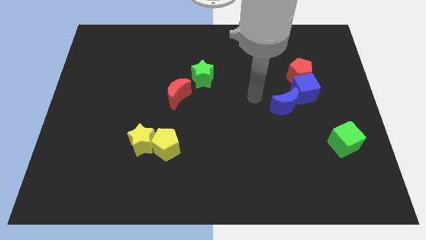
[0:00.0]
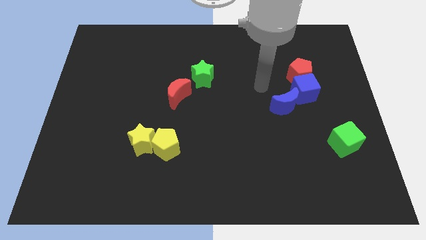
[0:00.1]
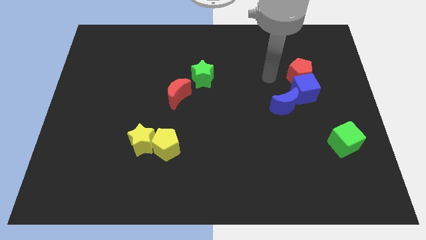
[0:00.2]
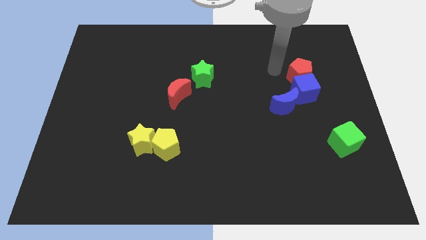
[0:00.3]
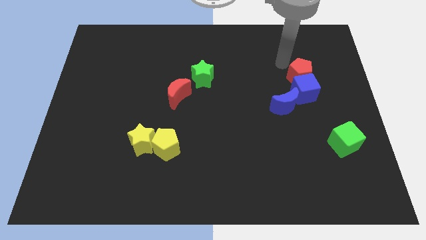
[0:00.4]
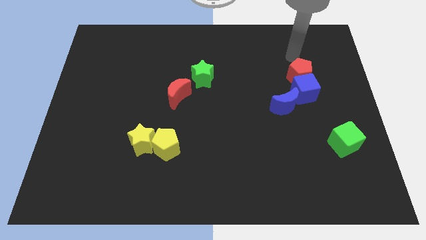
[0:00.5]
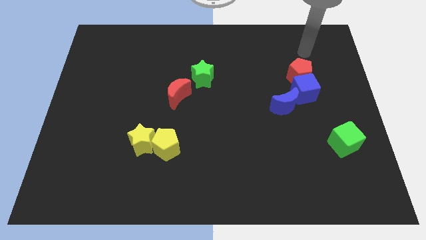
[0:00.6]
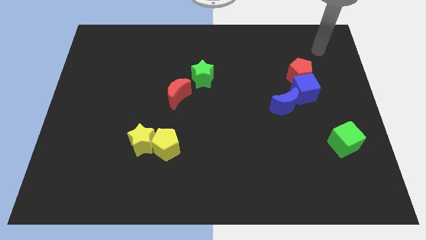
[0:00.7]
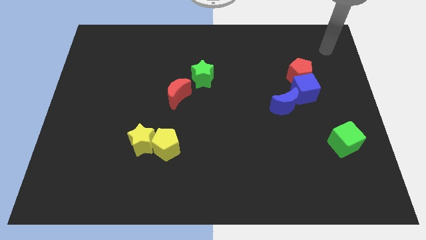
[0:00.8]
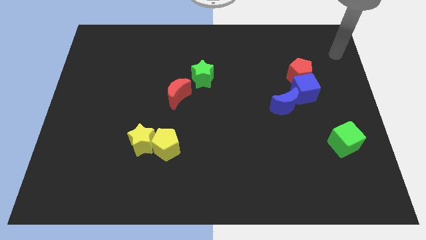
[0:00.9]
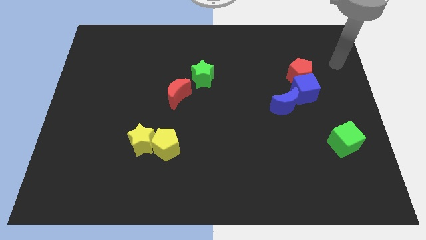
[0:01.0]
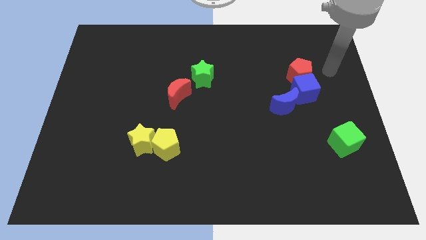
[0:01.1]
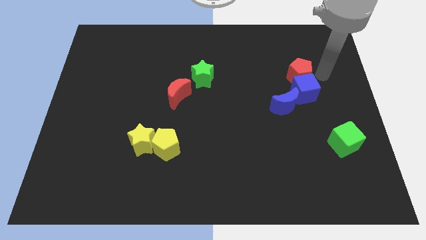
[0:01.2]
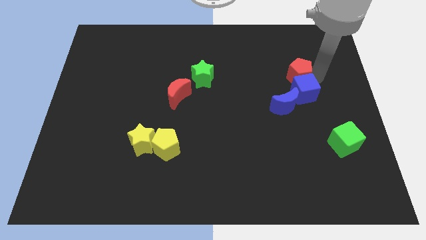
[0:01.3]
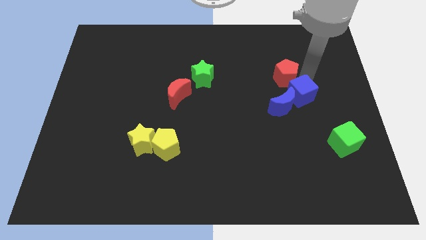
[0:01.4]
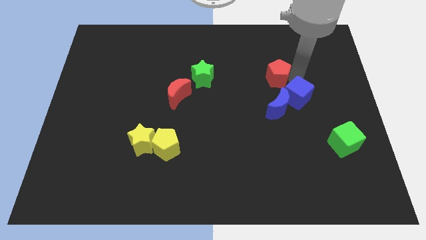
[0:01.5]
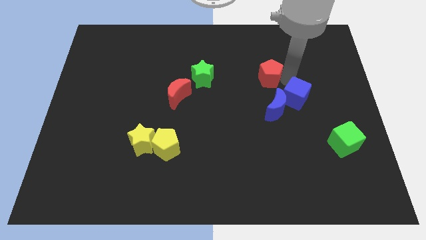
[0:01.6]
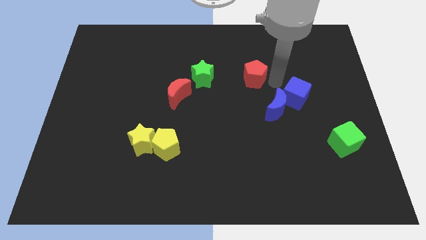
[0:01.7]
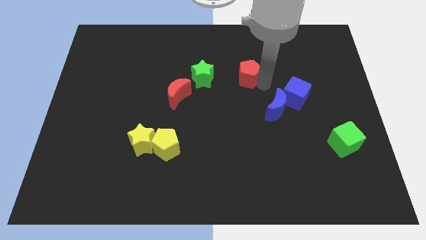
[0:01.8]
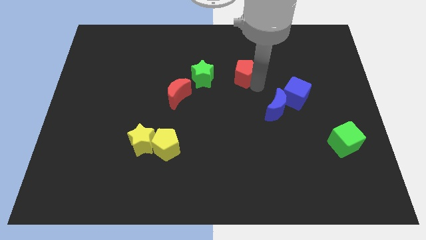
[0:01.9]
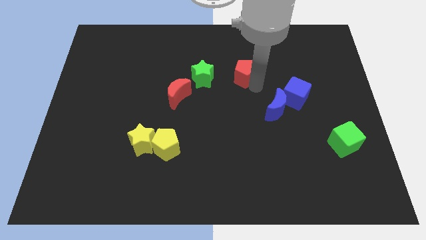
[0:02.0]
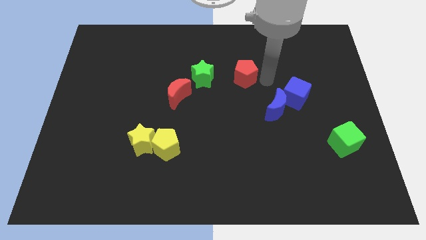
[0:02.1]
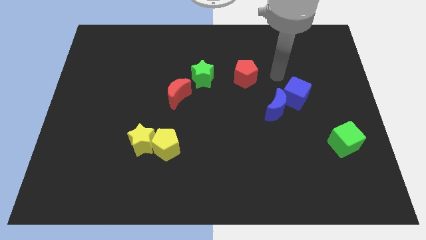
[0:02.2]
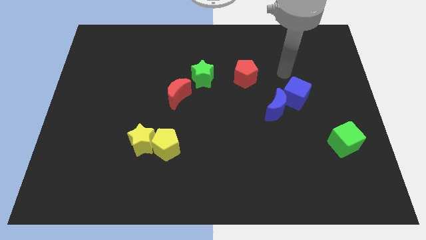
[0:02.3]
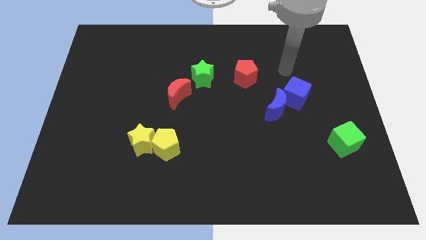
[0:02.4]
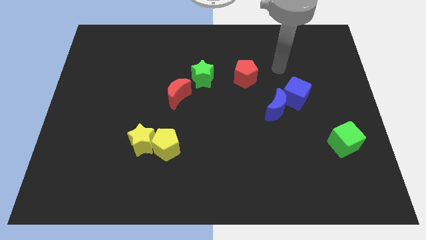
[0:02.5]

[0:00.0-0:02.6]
separate red pentagon from blue cube

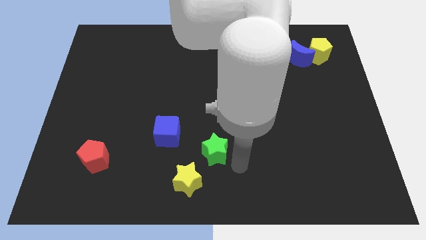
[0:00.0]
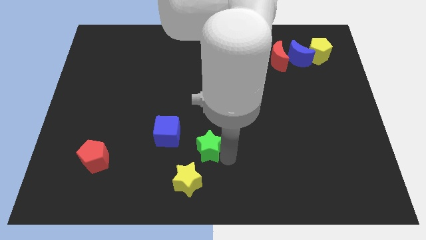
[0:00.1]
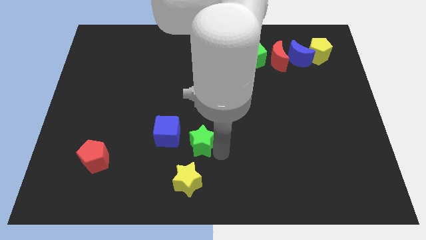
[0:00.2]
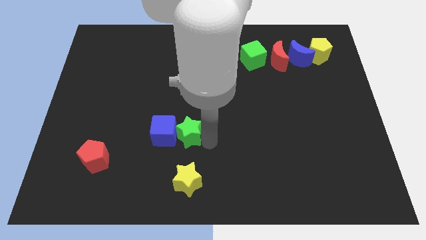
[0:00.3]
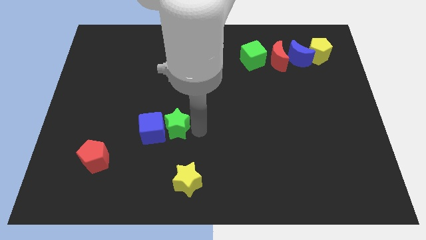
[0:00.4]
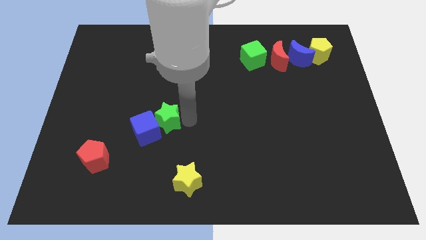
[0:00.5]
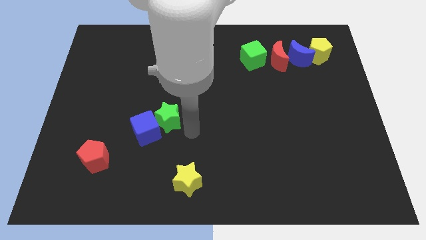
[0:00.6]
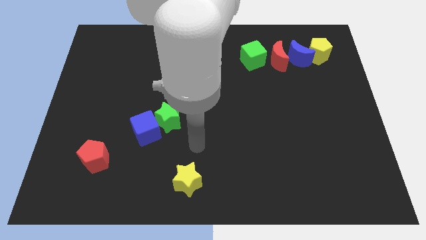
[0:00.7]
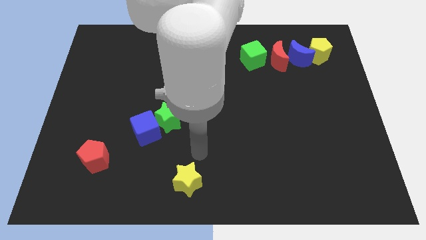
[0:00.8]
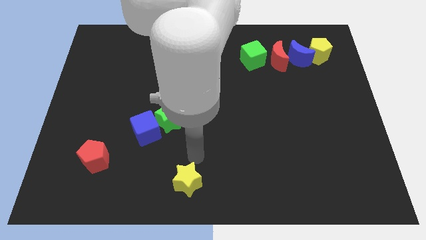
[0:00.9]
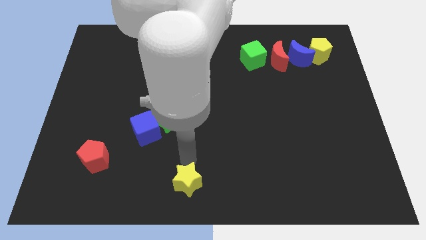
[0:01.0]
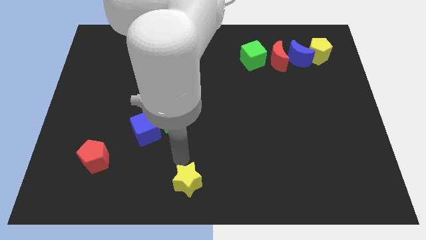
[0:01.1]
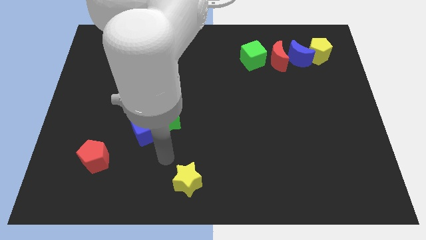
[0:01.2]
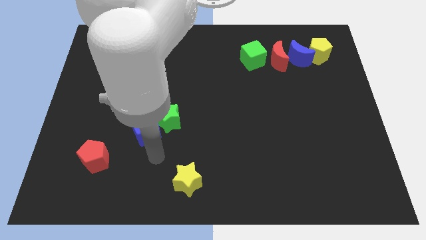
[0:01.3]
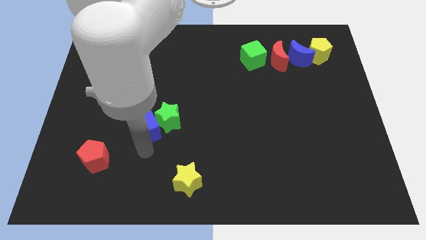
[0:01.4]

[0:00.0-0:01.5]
move the green star right to the blue cube

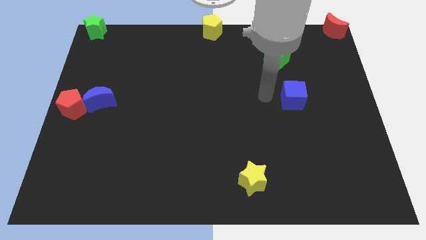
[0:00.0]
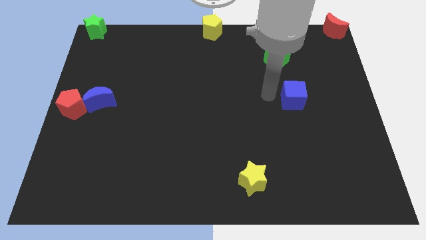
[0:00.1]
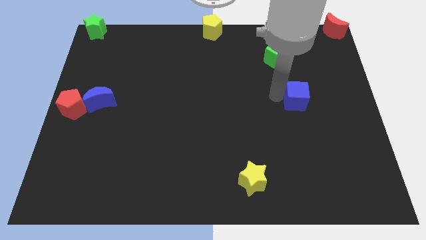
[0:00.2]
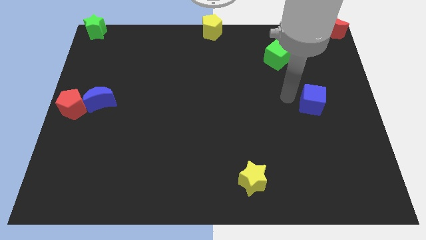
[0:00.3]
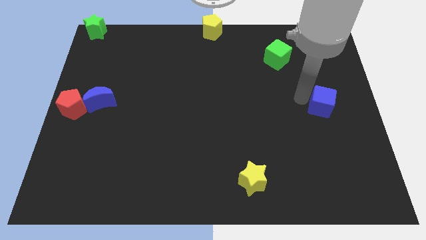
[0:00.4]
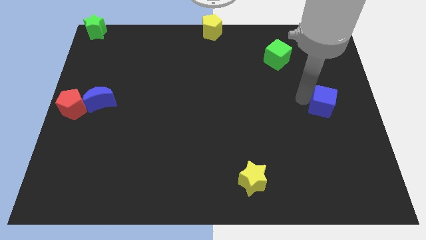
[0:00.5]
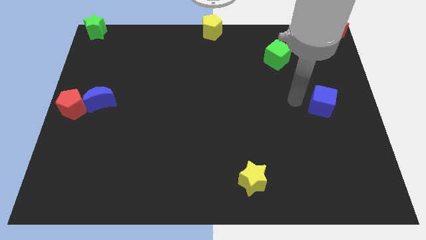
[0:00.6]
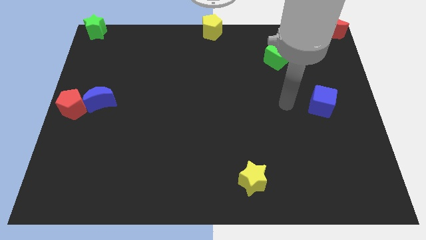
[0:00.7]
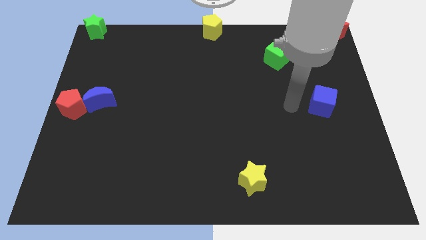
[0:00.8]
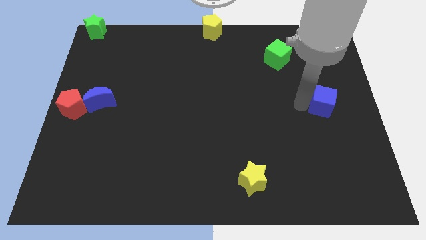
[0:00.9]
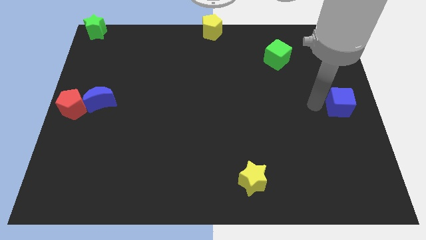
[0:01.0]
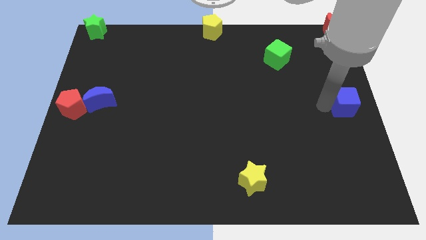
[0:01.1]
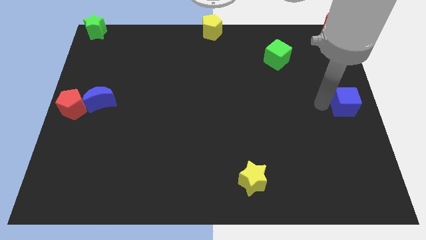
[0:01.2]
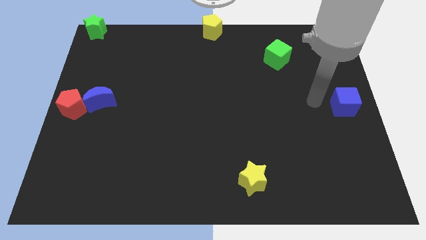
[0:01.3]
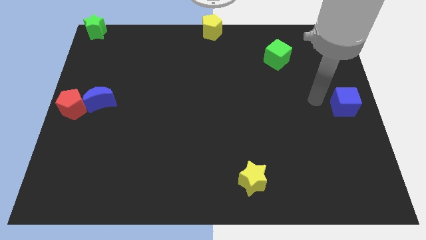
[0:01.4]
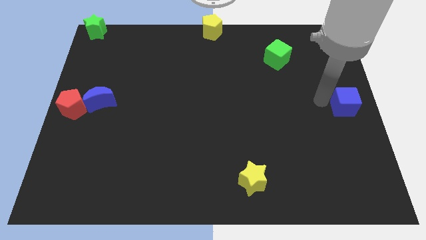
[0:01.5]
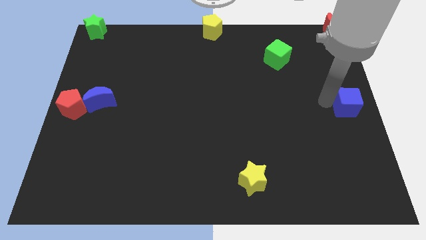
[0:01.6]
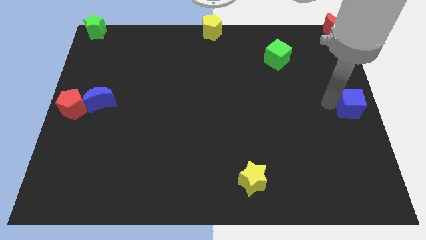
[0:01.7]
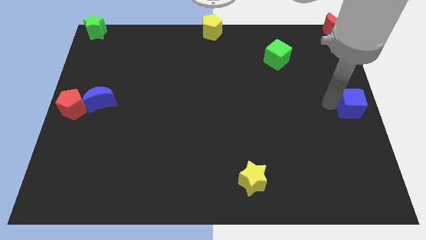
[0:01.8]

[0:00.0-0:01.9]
push the blue cube to the right centre of the board

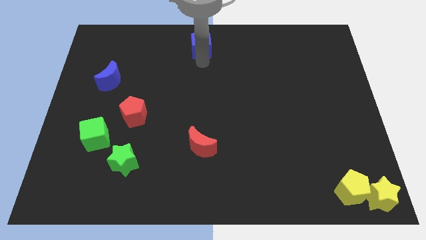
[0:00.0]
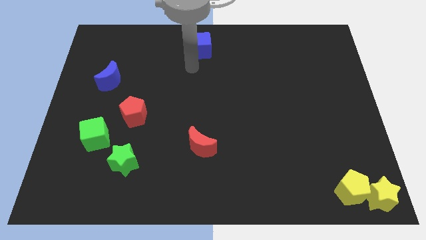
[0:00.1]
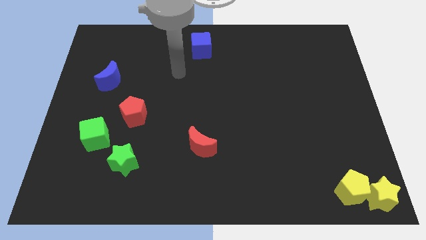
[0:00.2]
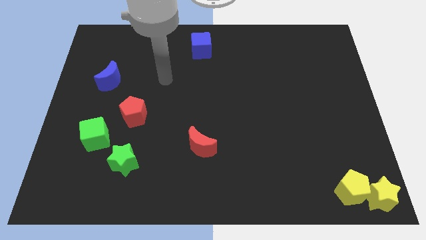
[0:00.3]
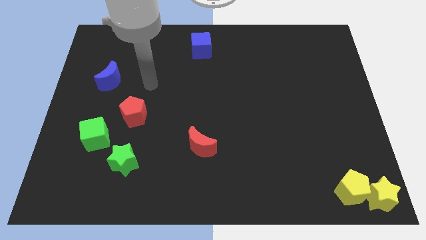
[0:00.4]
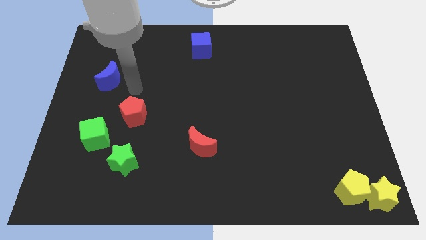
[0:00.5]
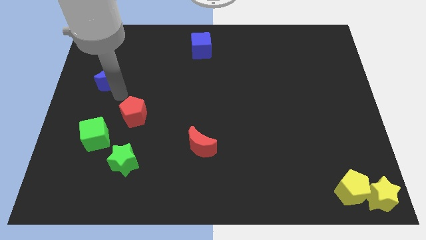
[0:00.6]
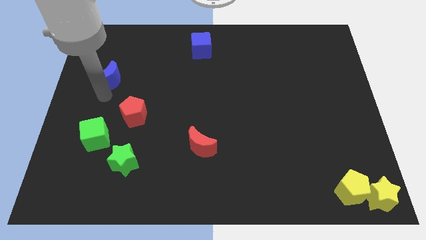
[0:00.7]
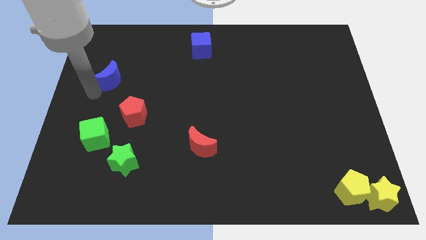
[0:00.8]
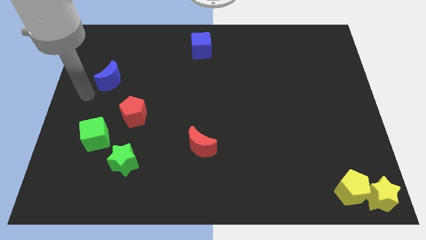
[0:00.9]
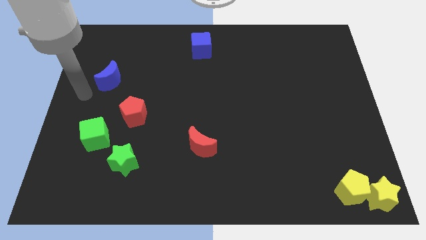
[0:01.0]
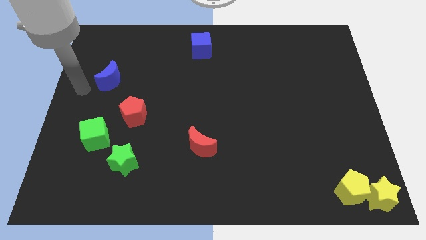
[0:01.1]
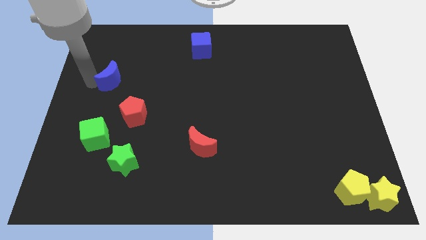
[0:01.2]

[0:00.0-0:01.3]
move your arm away from the blue cube

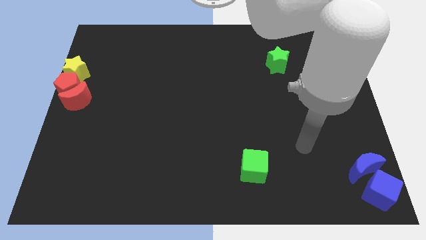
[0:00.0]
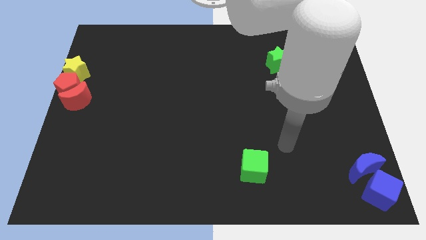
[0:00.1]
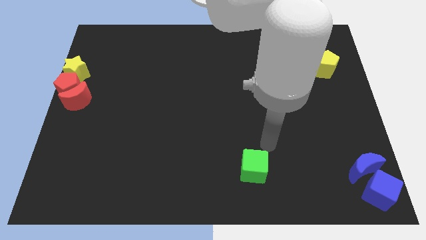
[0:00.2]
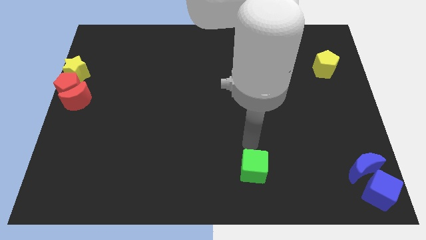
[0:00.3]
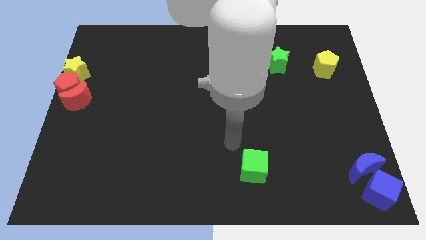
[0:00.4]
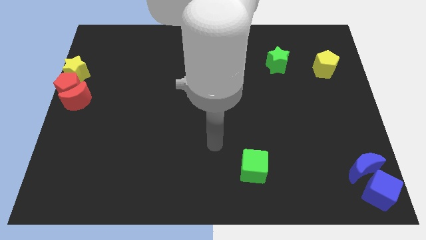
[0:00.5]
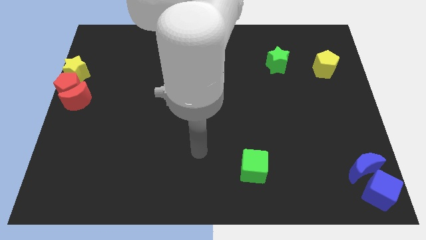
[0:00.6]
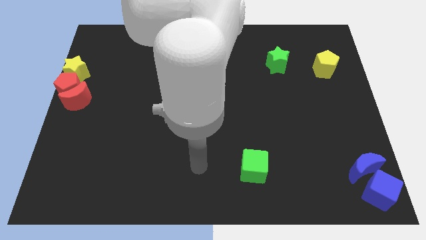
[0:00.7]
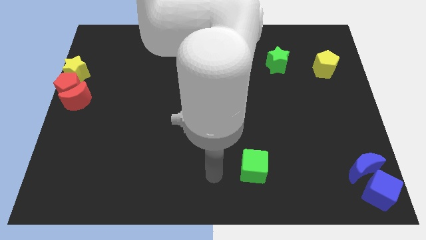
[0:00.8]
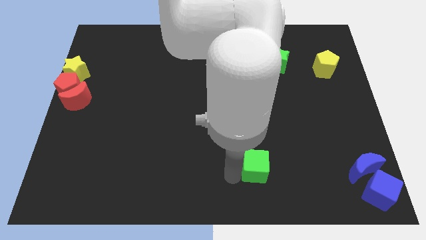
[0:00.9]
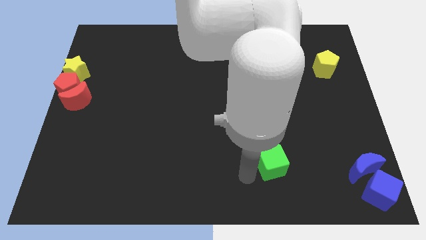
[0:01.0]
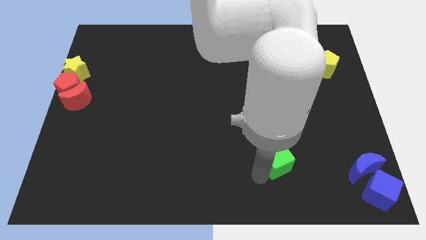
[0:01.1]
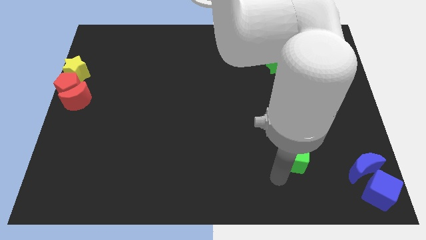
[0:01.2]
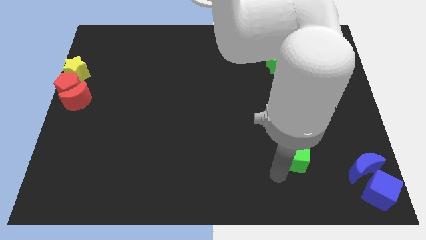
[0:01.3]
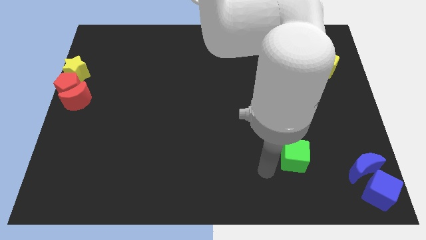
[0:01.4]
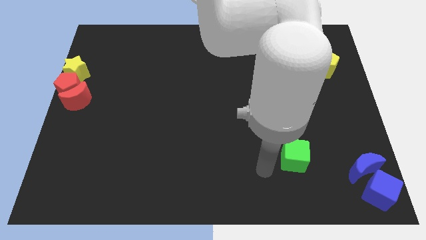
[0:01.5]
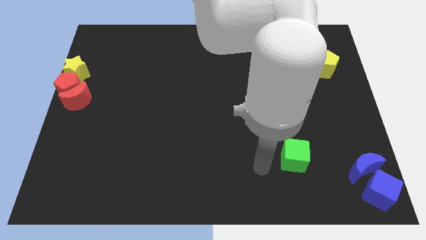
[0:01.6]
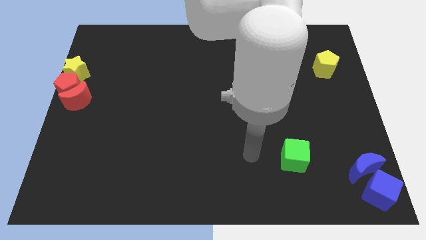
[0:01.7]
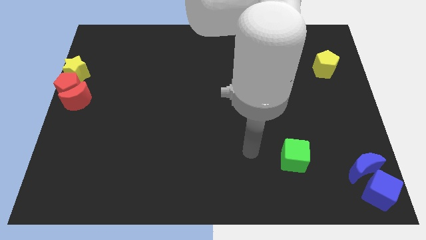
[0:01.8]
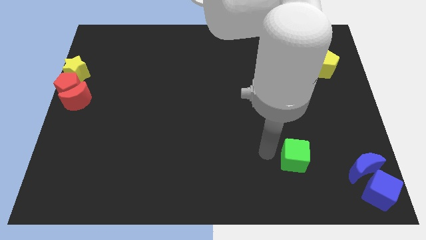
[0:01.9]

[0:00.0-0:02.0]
push the green cube slightly to the right
